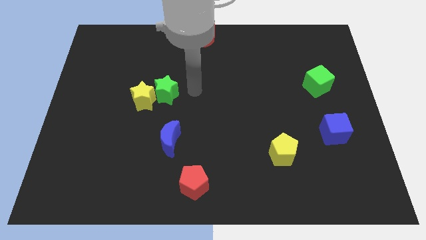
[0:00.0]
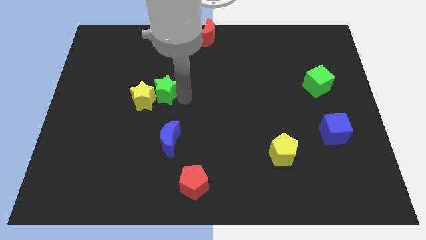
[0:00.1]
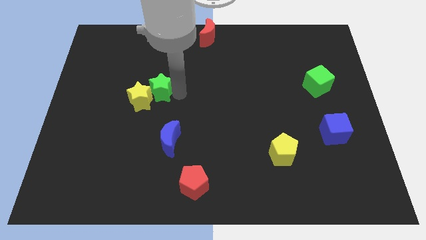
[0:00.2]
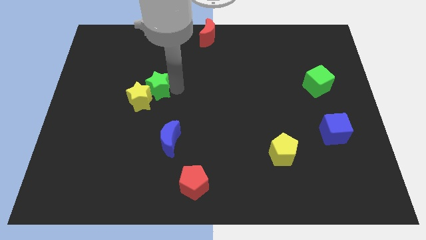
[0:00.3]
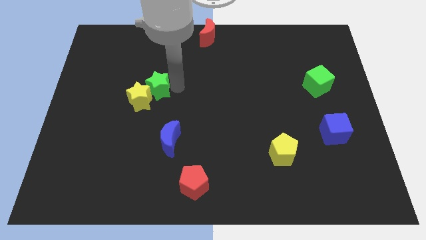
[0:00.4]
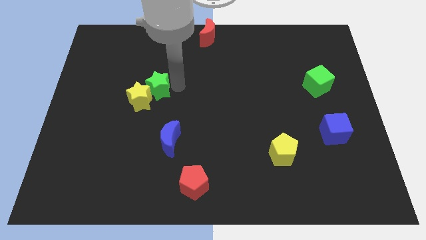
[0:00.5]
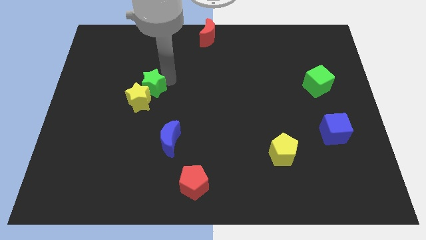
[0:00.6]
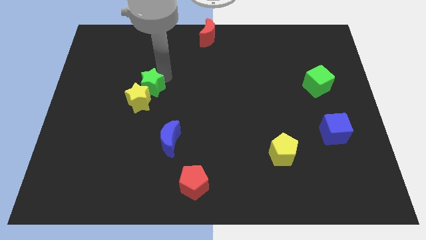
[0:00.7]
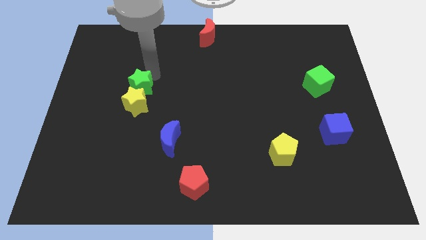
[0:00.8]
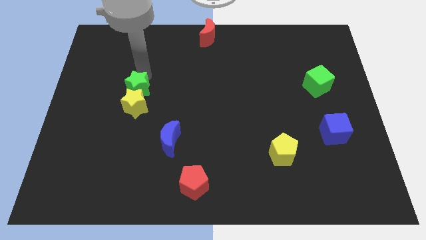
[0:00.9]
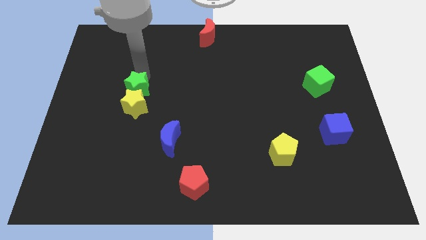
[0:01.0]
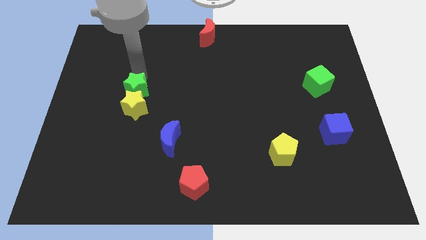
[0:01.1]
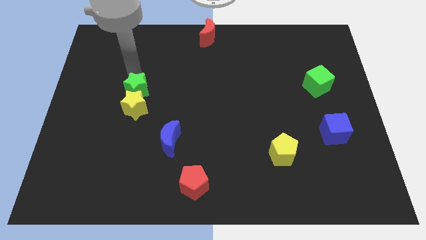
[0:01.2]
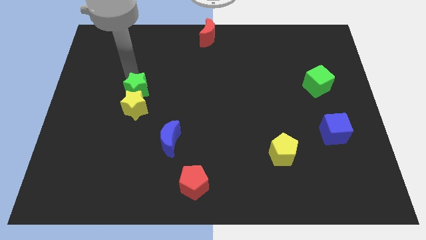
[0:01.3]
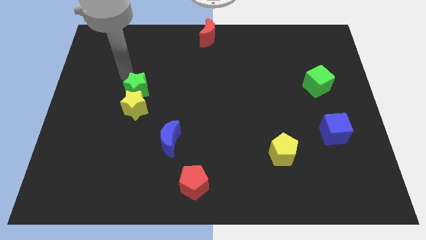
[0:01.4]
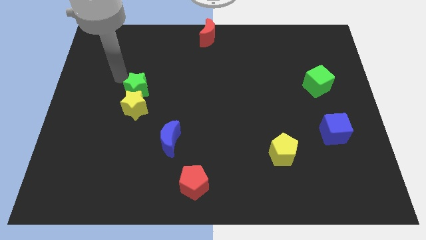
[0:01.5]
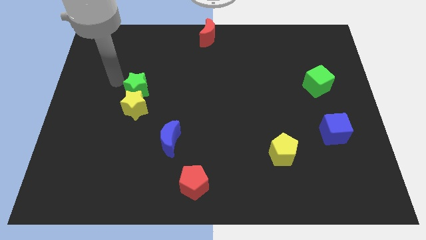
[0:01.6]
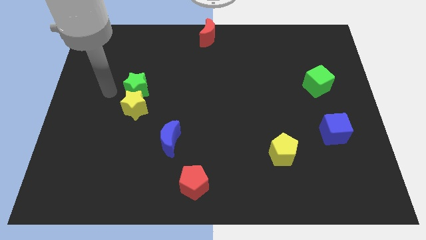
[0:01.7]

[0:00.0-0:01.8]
put the green star at the top of the yellow star

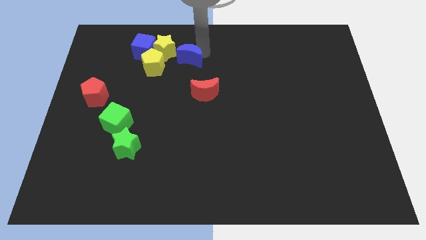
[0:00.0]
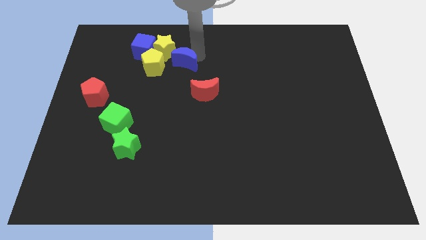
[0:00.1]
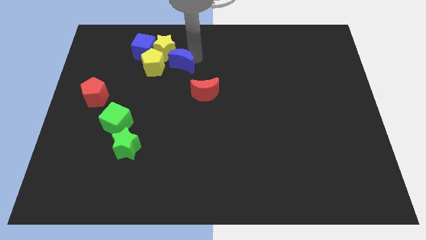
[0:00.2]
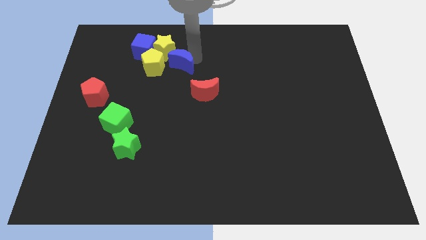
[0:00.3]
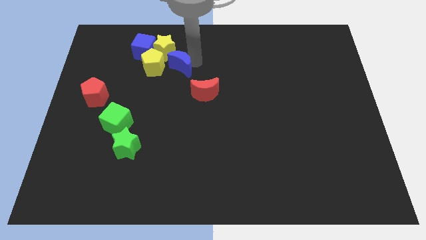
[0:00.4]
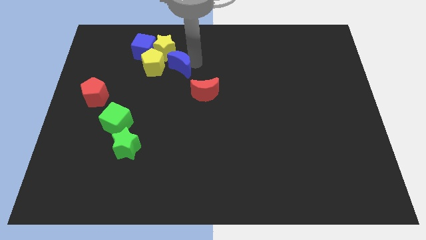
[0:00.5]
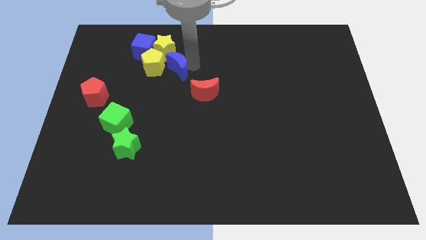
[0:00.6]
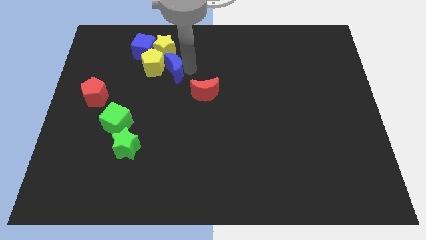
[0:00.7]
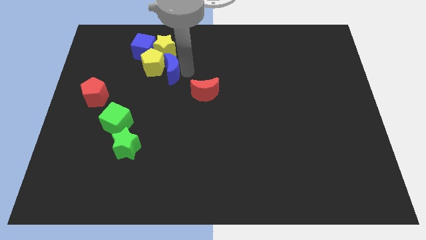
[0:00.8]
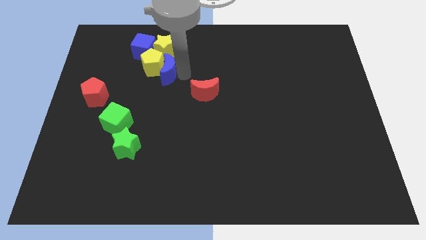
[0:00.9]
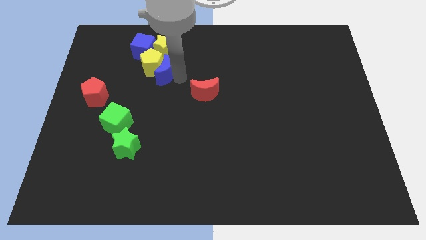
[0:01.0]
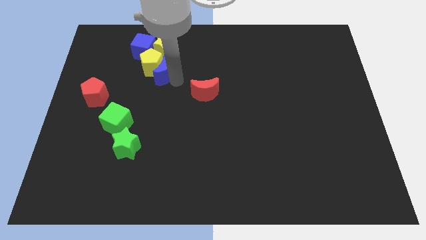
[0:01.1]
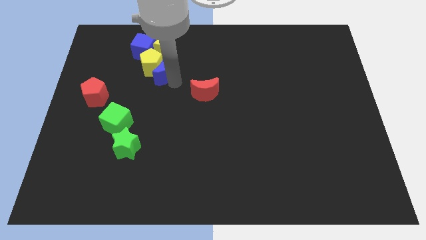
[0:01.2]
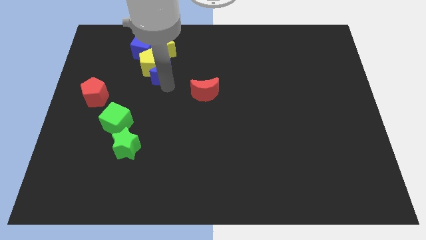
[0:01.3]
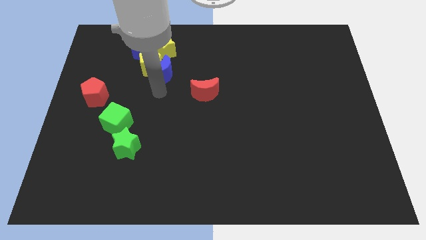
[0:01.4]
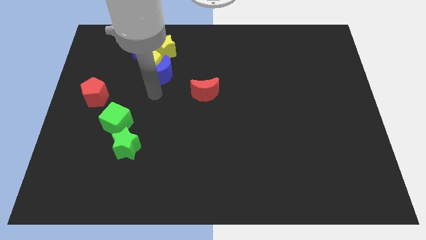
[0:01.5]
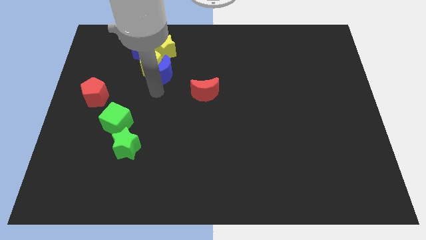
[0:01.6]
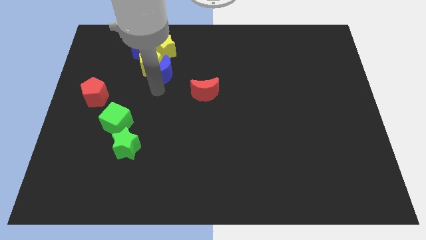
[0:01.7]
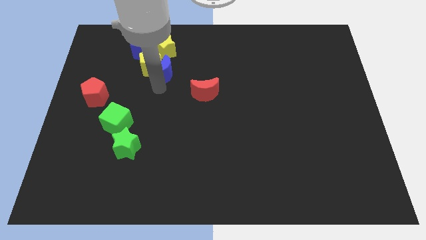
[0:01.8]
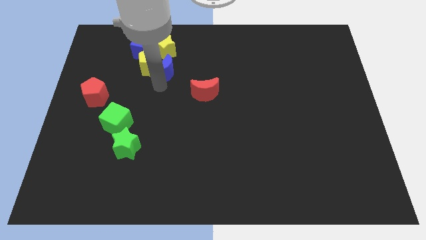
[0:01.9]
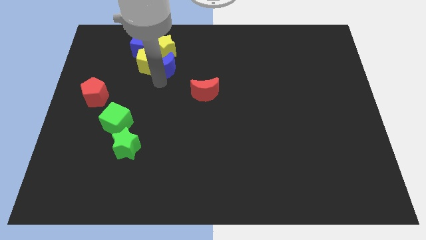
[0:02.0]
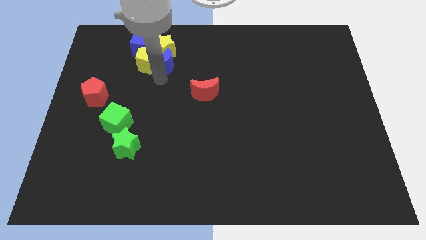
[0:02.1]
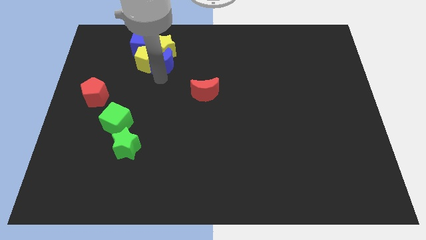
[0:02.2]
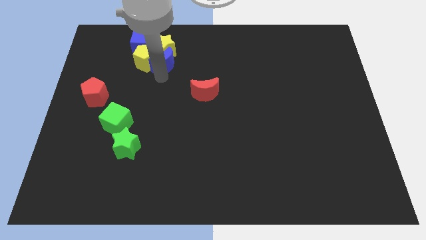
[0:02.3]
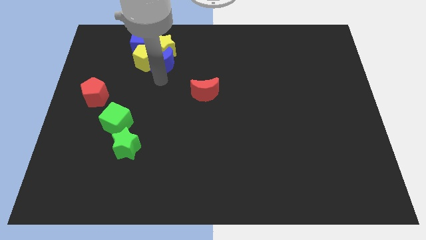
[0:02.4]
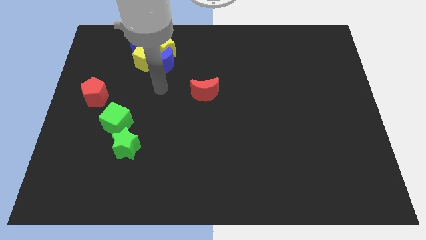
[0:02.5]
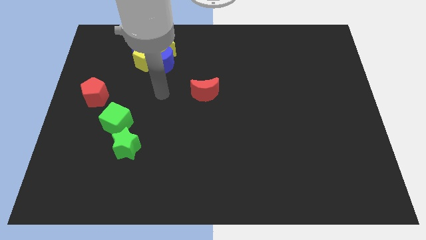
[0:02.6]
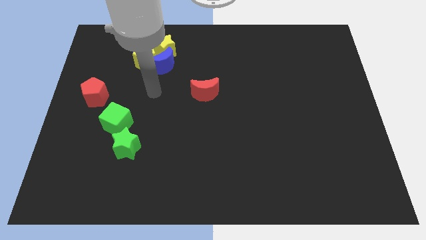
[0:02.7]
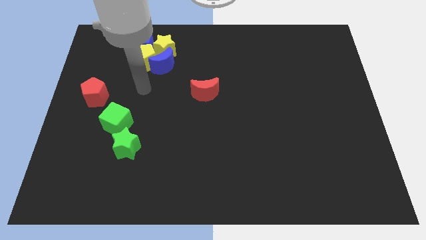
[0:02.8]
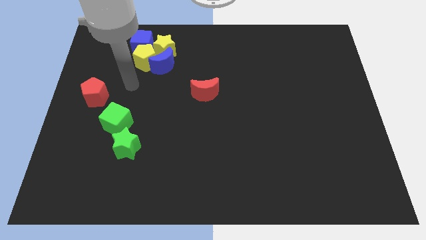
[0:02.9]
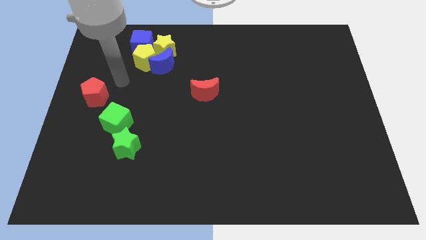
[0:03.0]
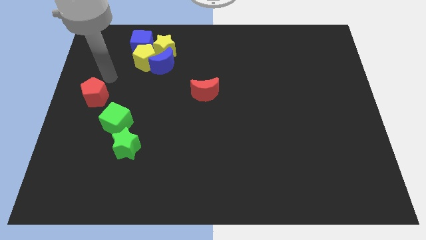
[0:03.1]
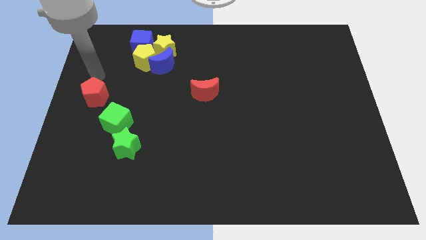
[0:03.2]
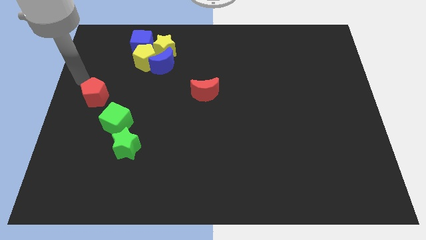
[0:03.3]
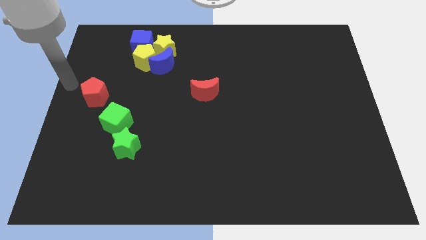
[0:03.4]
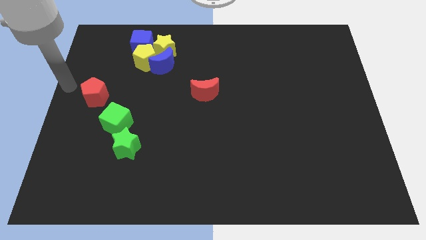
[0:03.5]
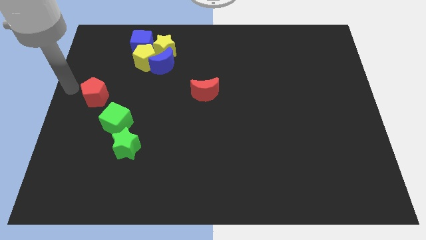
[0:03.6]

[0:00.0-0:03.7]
move the group of blocks towards top left

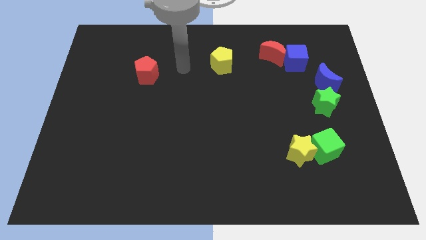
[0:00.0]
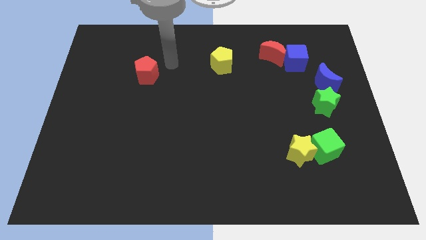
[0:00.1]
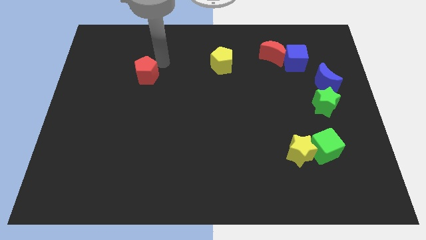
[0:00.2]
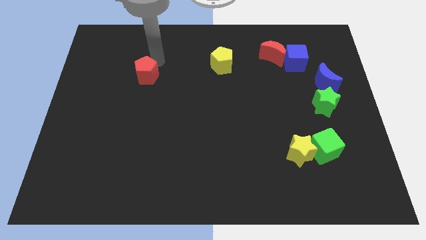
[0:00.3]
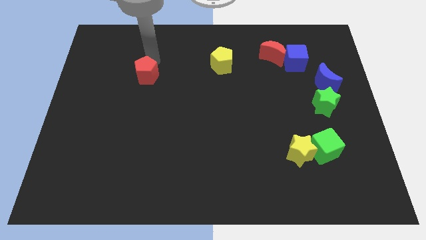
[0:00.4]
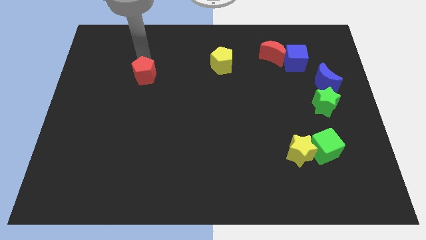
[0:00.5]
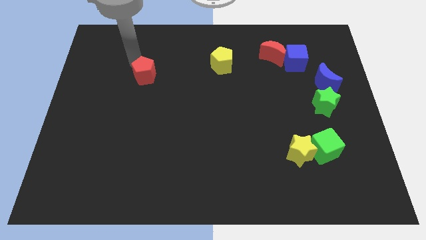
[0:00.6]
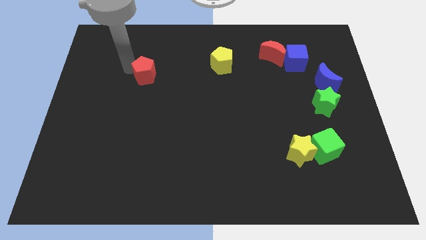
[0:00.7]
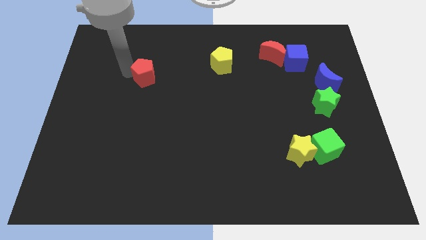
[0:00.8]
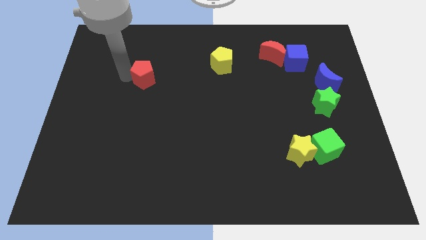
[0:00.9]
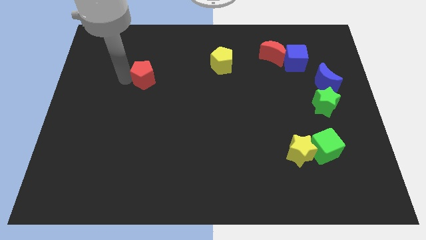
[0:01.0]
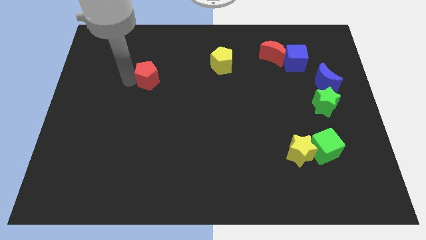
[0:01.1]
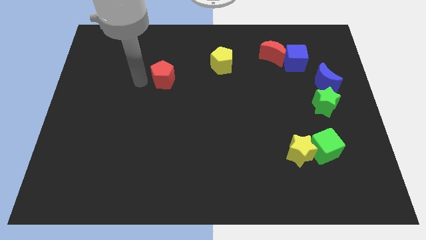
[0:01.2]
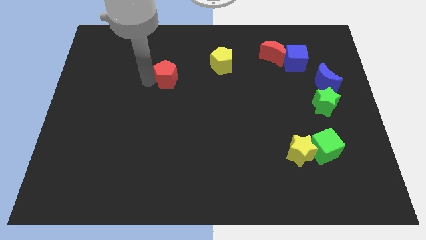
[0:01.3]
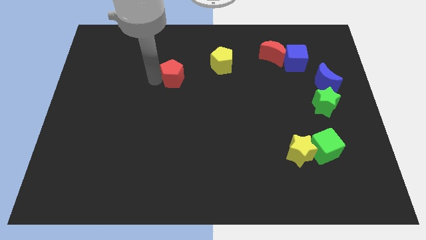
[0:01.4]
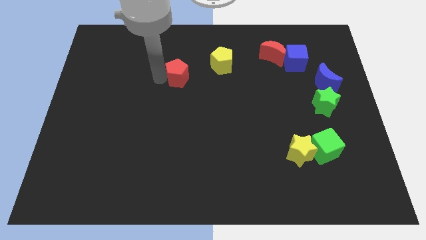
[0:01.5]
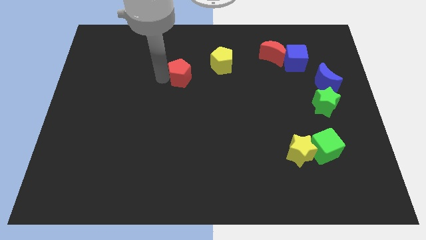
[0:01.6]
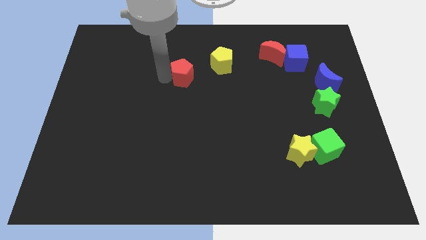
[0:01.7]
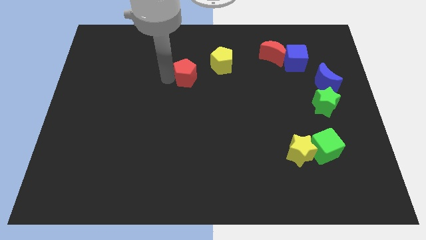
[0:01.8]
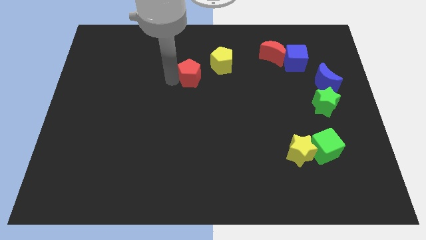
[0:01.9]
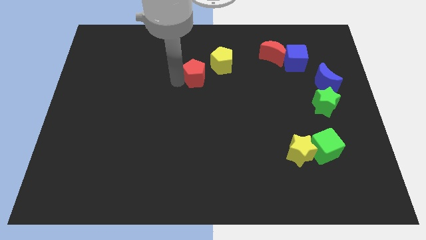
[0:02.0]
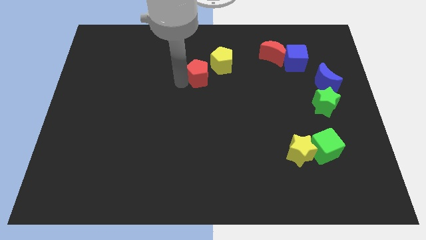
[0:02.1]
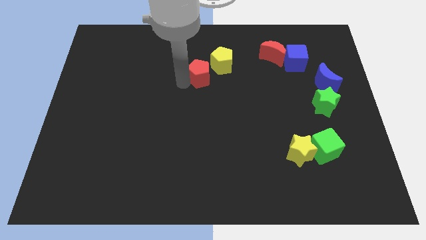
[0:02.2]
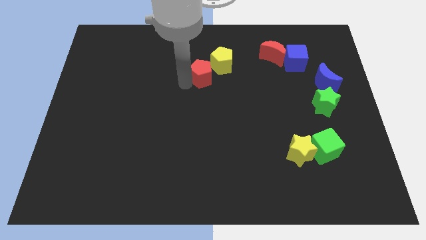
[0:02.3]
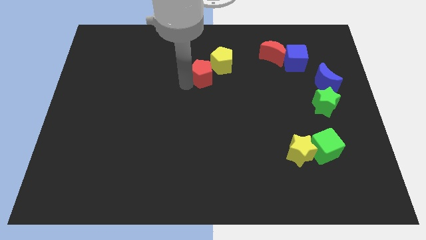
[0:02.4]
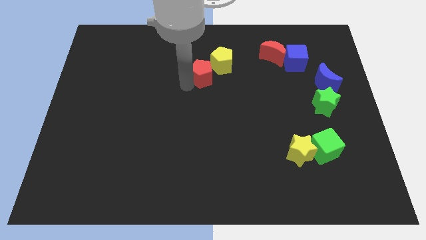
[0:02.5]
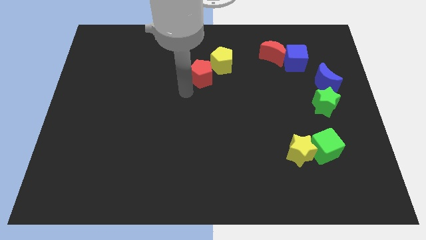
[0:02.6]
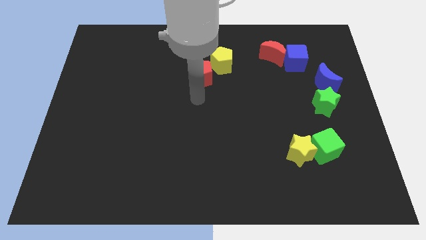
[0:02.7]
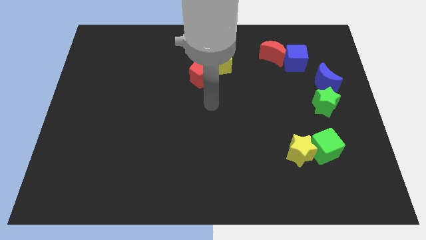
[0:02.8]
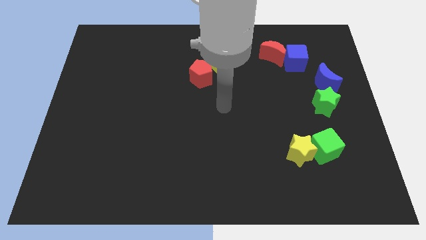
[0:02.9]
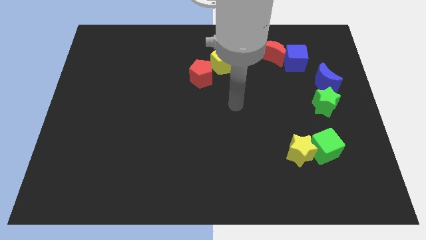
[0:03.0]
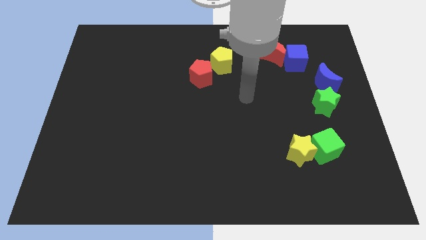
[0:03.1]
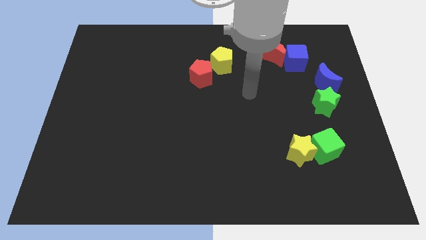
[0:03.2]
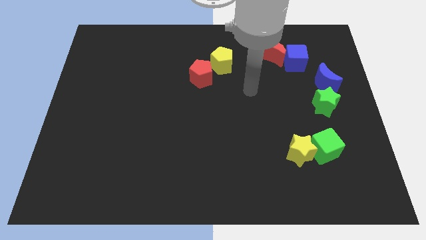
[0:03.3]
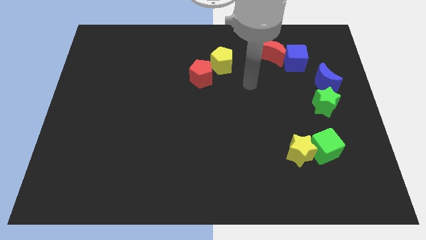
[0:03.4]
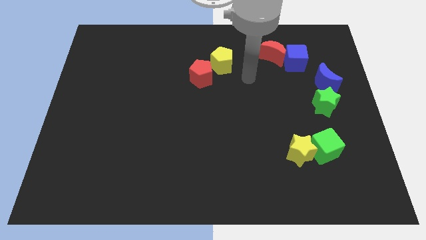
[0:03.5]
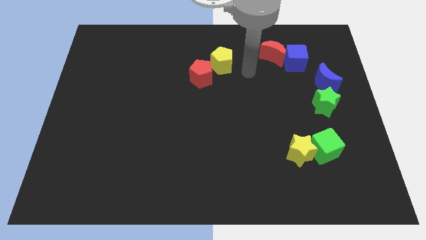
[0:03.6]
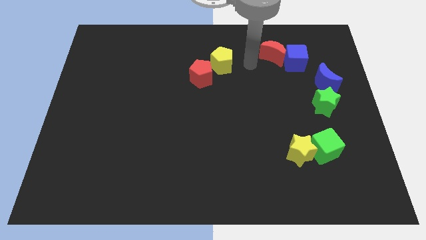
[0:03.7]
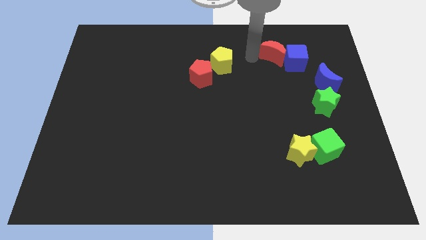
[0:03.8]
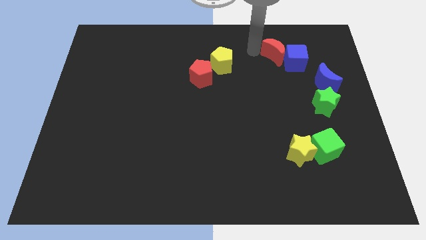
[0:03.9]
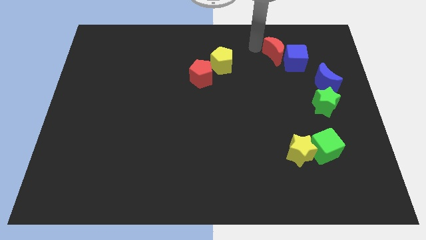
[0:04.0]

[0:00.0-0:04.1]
move the red pentagon close to the yellow pentagon
